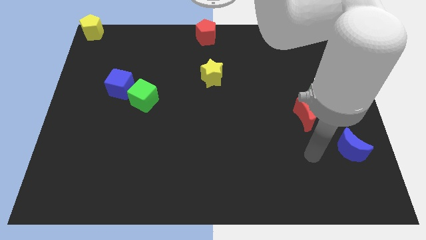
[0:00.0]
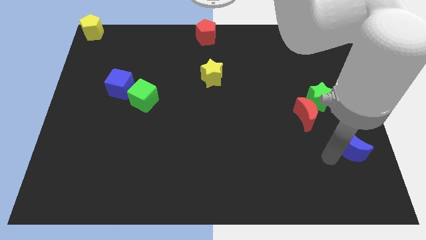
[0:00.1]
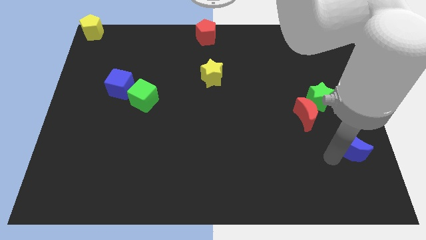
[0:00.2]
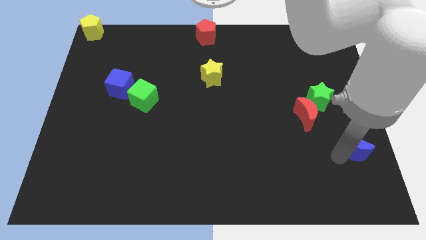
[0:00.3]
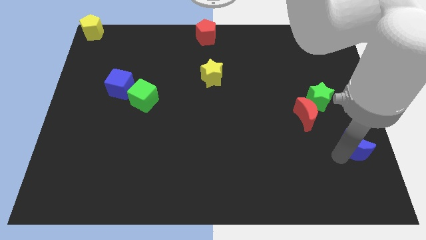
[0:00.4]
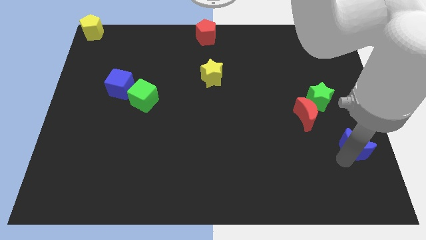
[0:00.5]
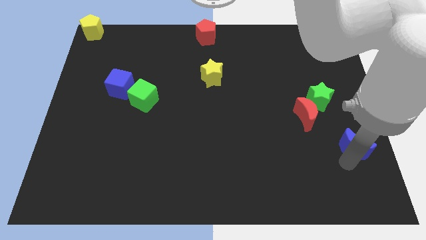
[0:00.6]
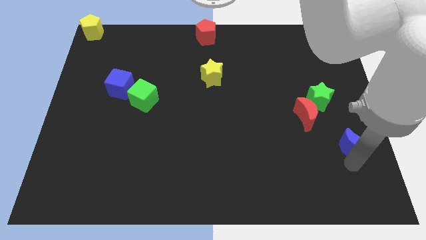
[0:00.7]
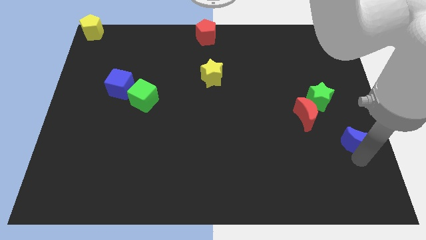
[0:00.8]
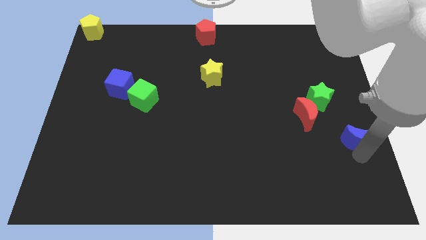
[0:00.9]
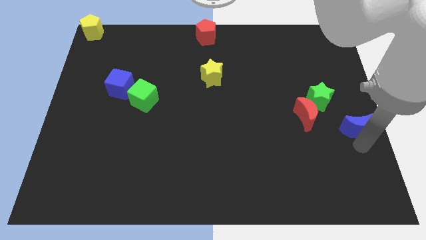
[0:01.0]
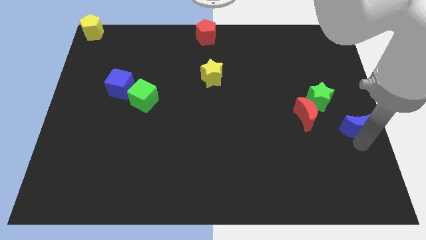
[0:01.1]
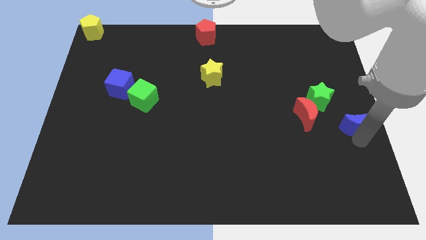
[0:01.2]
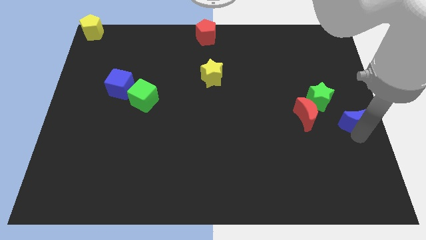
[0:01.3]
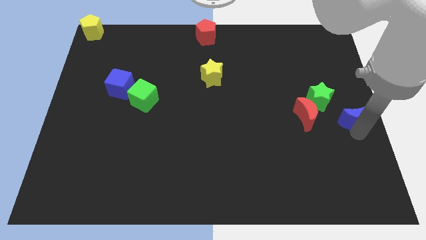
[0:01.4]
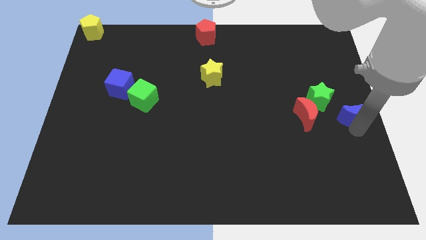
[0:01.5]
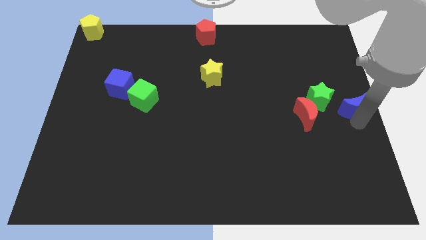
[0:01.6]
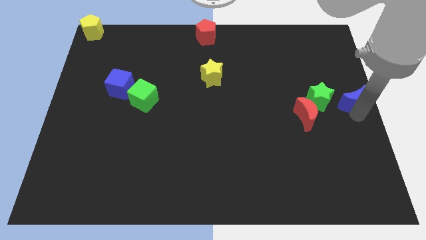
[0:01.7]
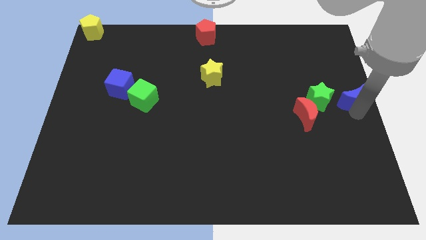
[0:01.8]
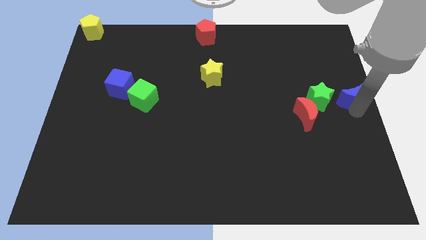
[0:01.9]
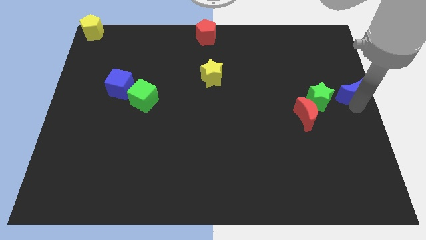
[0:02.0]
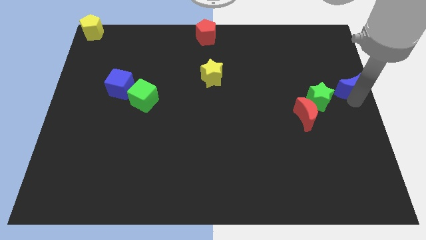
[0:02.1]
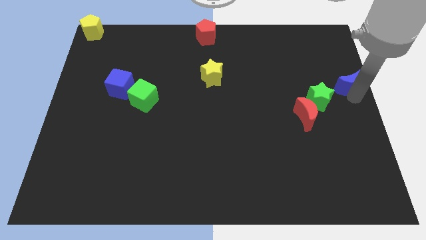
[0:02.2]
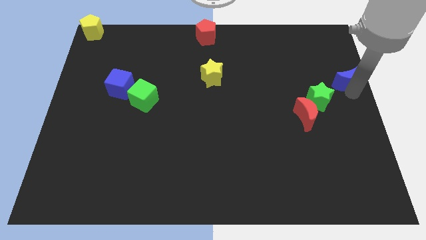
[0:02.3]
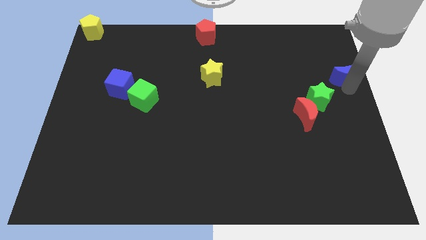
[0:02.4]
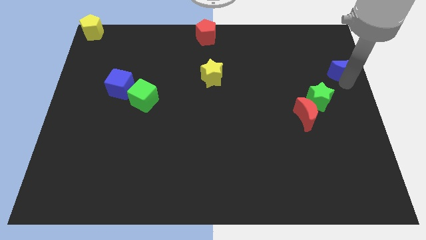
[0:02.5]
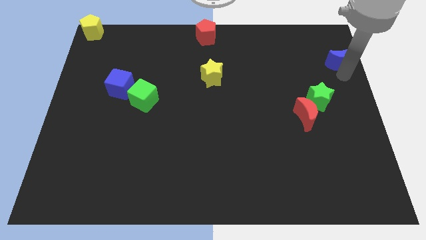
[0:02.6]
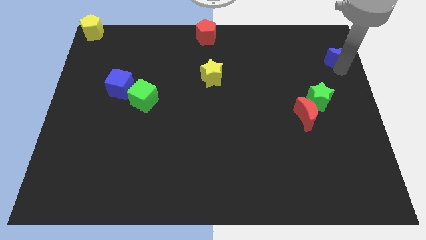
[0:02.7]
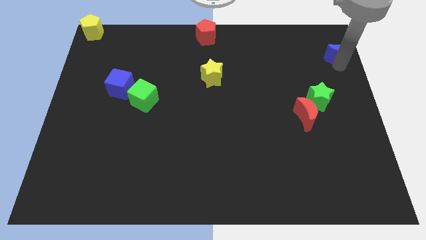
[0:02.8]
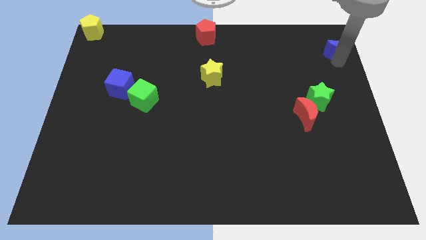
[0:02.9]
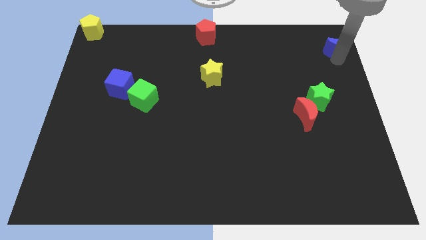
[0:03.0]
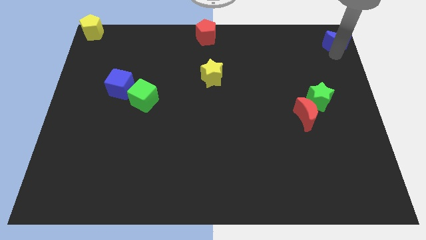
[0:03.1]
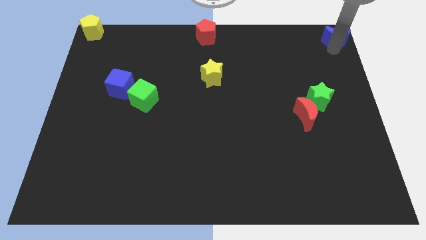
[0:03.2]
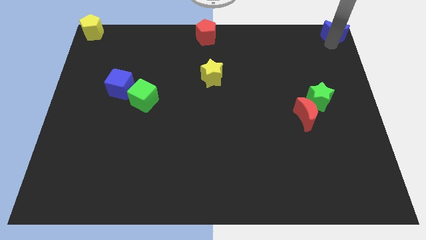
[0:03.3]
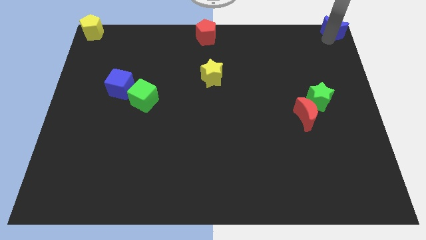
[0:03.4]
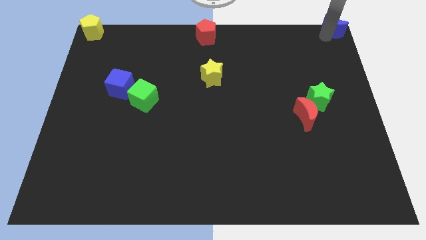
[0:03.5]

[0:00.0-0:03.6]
place blue moon to the top right corner of the board

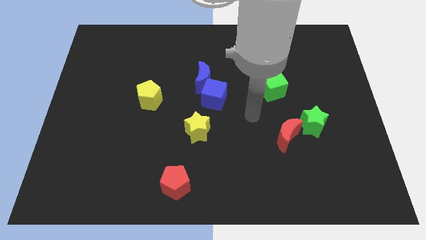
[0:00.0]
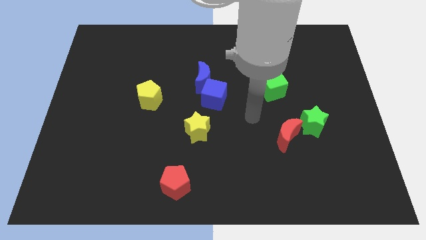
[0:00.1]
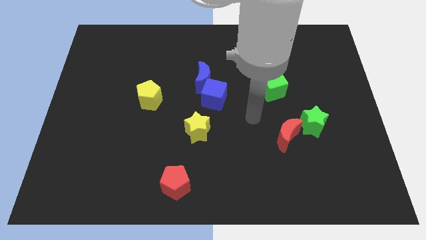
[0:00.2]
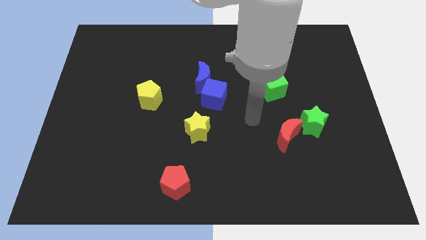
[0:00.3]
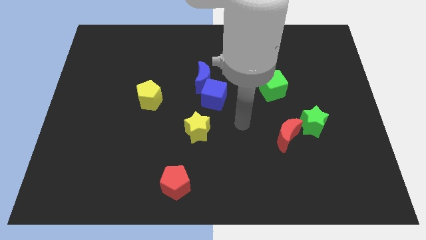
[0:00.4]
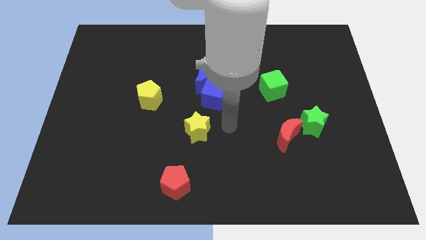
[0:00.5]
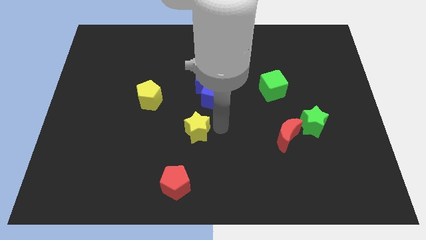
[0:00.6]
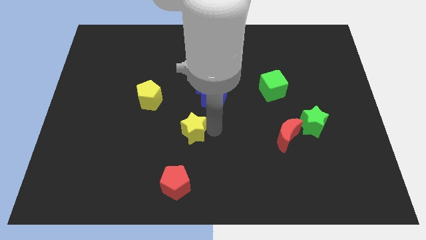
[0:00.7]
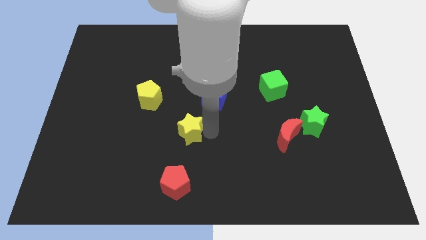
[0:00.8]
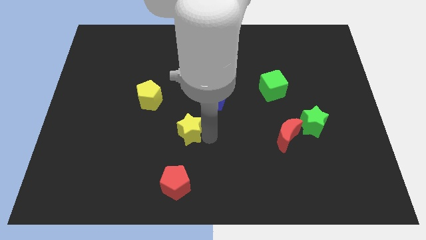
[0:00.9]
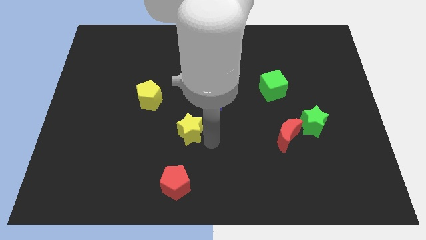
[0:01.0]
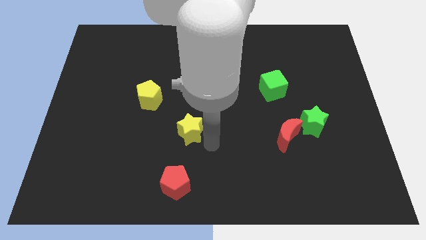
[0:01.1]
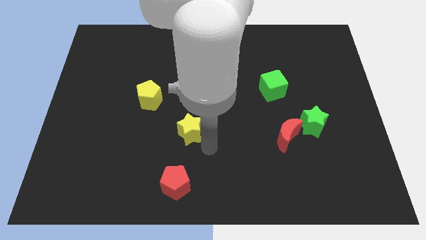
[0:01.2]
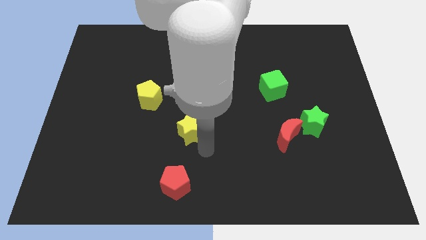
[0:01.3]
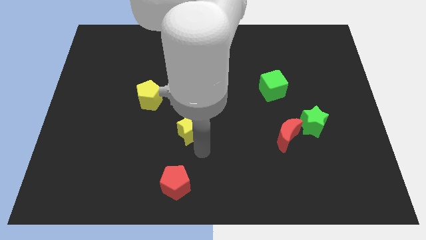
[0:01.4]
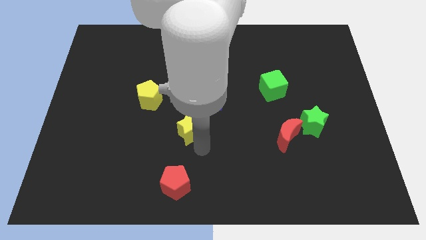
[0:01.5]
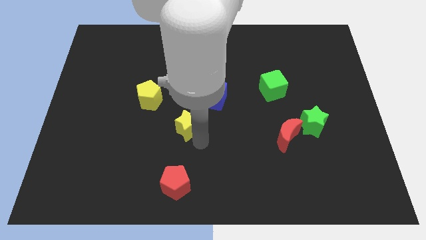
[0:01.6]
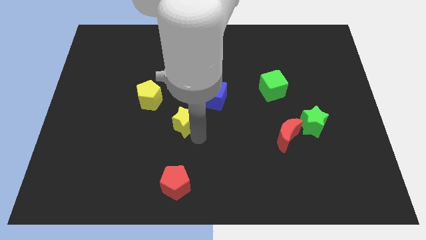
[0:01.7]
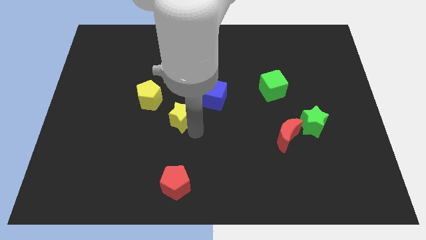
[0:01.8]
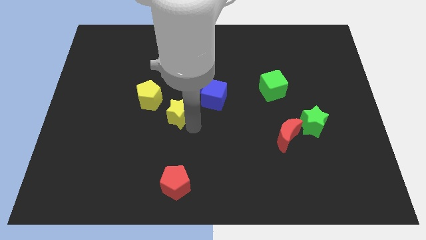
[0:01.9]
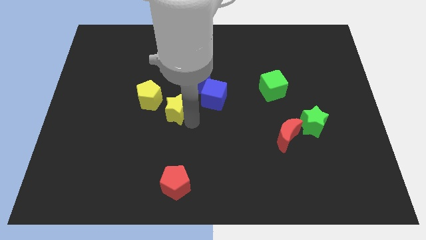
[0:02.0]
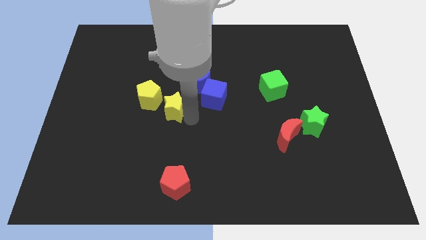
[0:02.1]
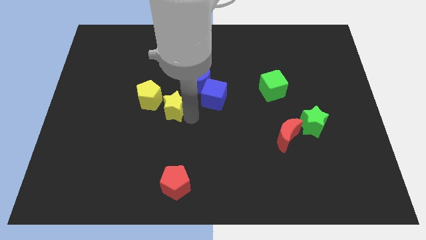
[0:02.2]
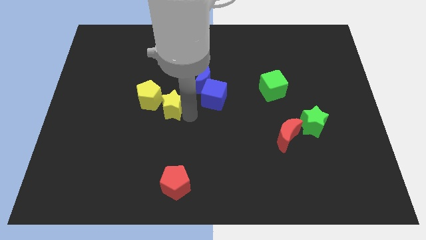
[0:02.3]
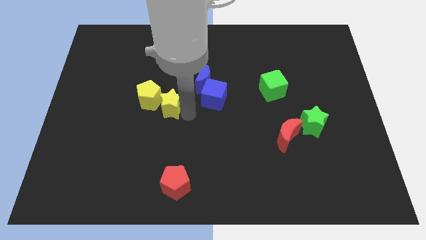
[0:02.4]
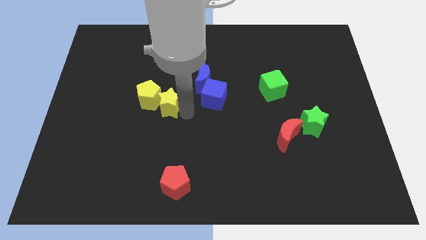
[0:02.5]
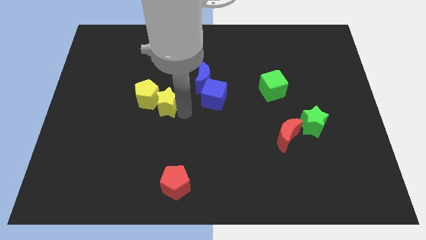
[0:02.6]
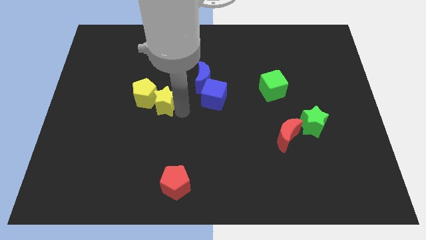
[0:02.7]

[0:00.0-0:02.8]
push the yellow star into the yellow pentagon

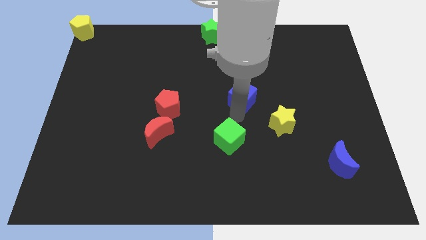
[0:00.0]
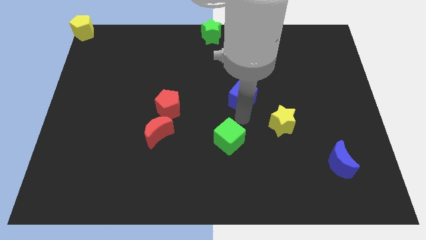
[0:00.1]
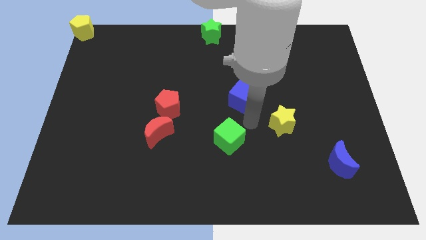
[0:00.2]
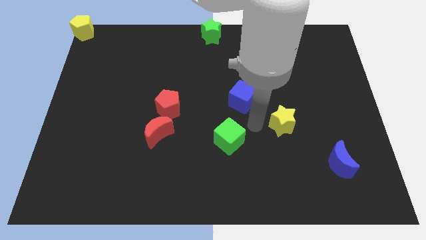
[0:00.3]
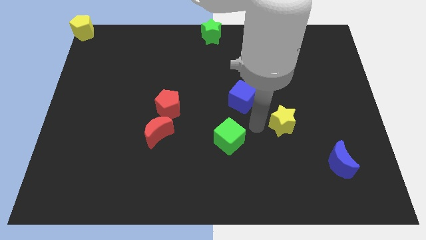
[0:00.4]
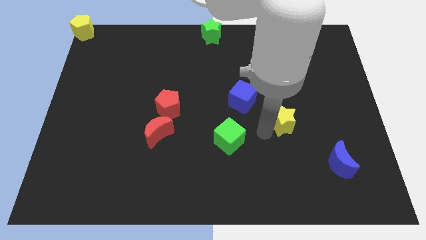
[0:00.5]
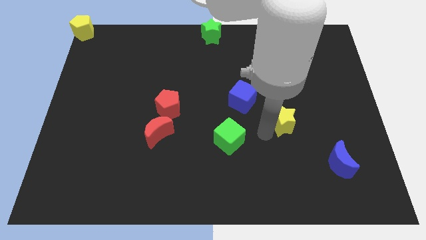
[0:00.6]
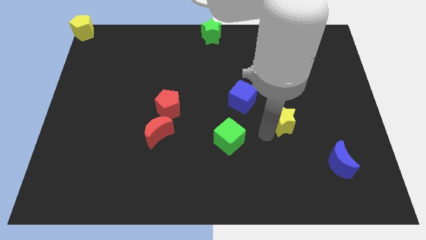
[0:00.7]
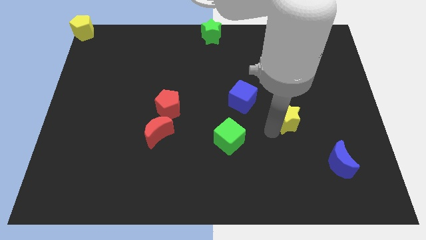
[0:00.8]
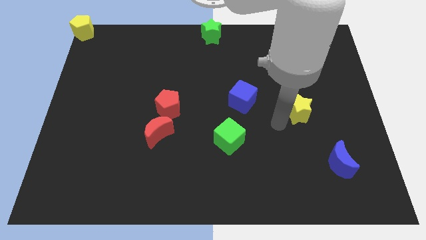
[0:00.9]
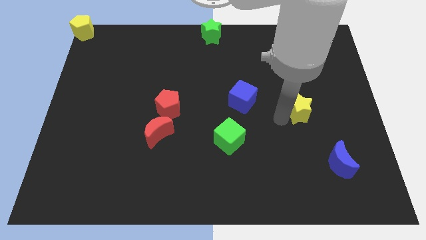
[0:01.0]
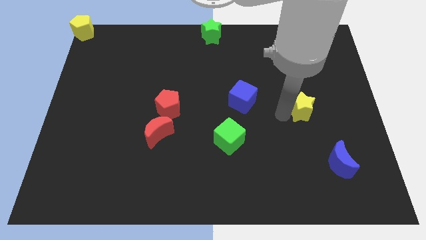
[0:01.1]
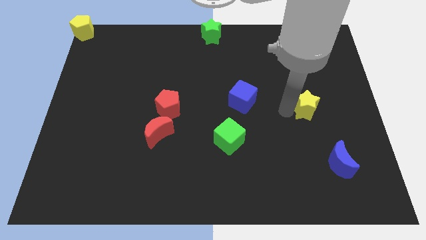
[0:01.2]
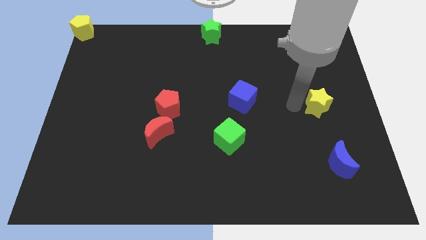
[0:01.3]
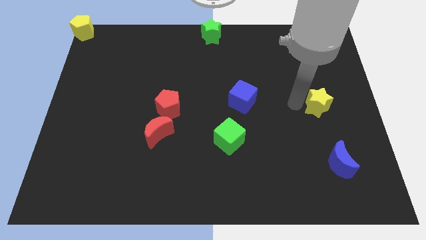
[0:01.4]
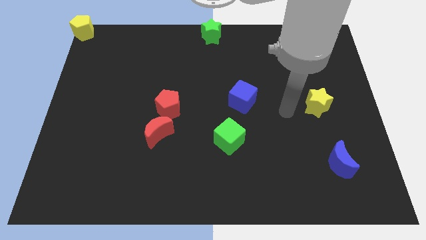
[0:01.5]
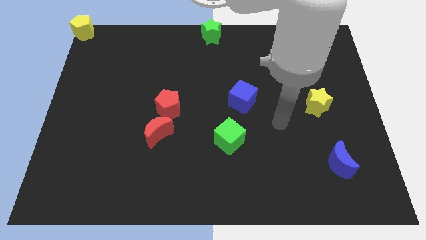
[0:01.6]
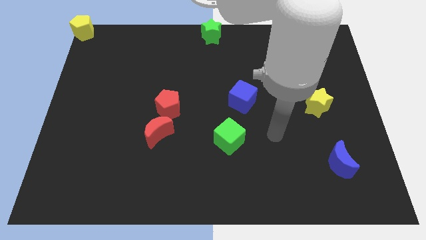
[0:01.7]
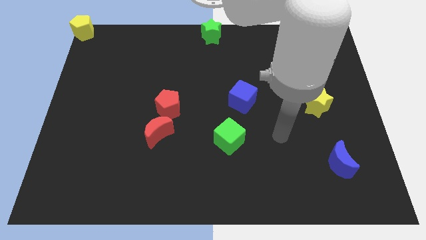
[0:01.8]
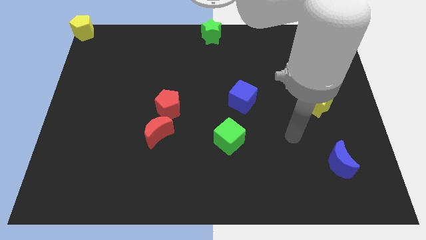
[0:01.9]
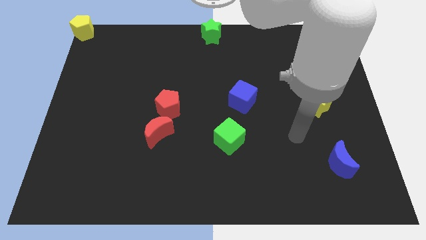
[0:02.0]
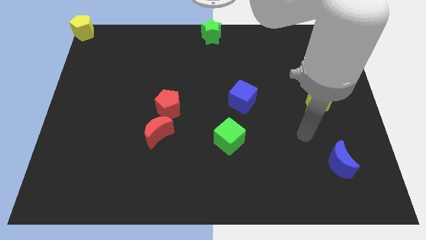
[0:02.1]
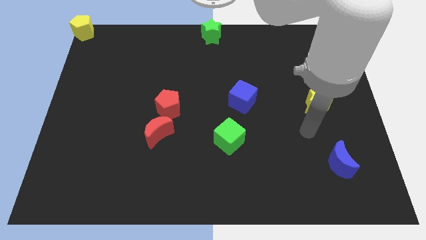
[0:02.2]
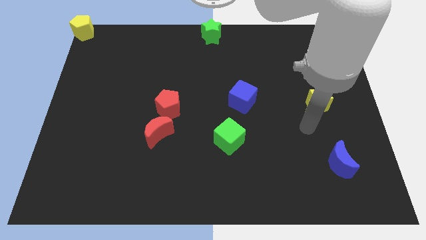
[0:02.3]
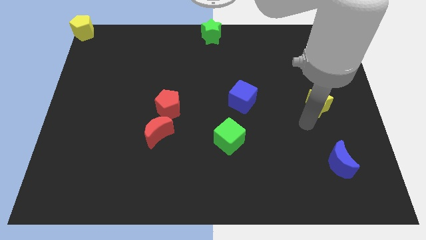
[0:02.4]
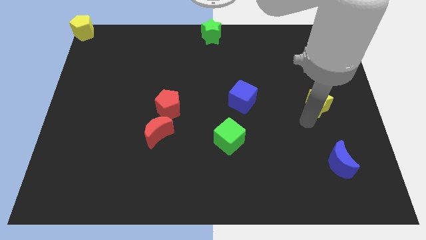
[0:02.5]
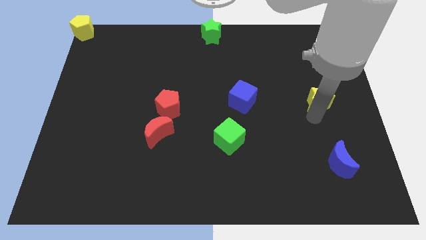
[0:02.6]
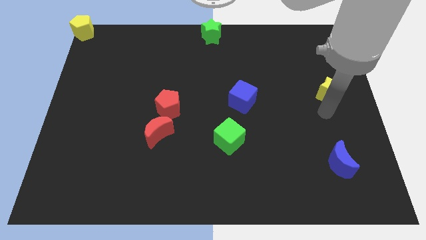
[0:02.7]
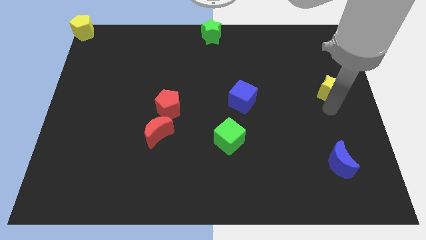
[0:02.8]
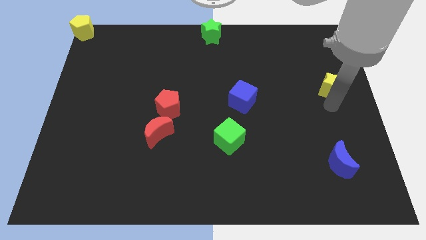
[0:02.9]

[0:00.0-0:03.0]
push the yellow star towards the top side of the board
